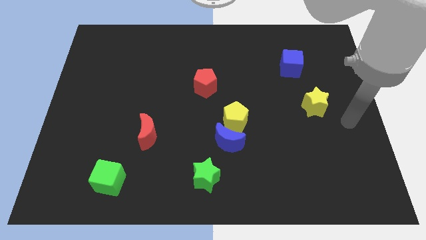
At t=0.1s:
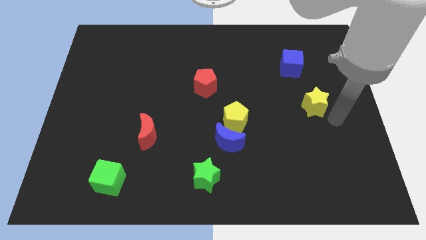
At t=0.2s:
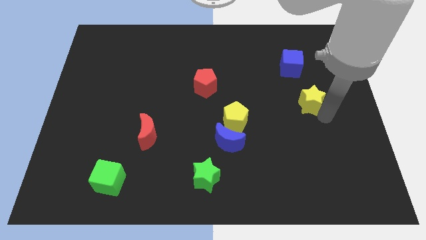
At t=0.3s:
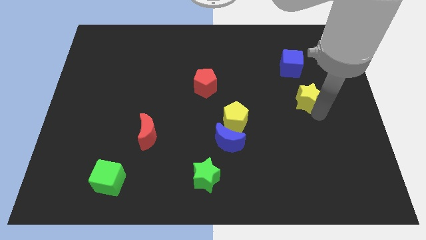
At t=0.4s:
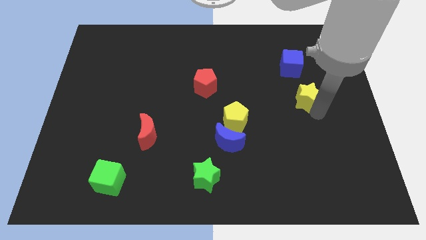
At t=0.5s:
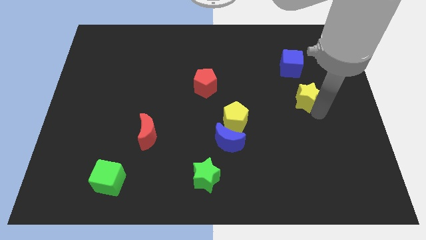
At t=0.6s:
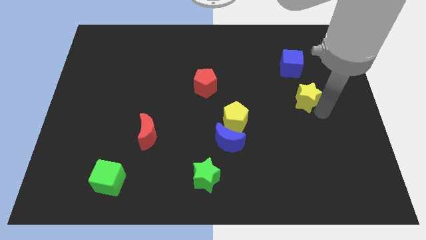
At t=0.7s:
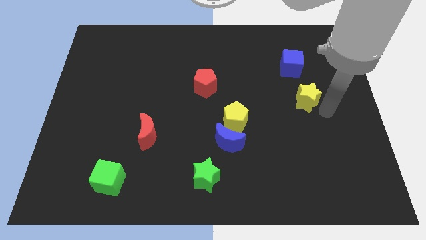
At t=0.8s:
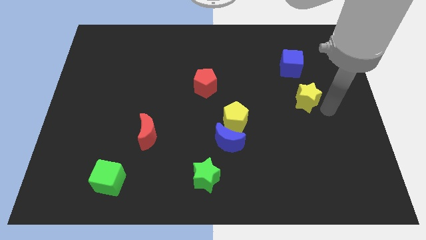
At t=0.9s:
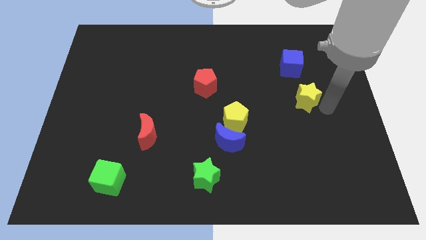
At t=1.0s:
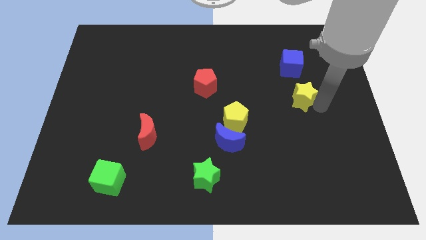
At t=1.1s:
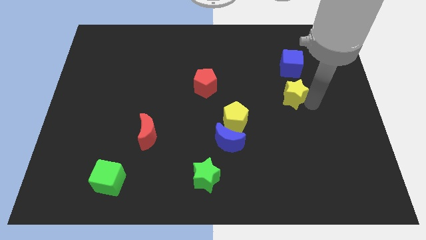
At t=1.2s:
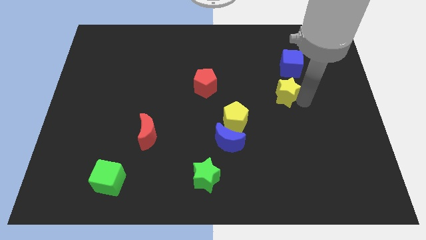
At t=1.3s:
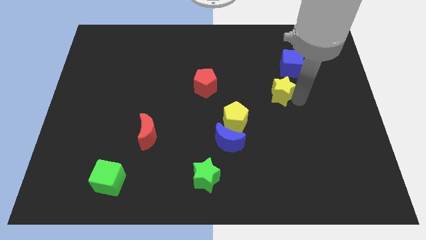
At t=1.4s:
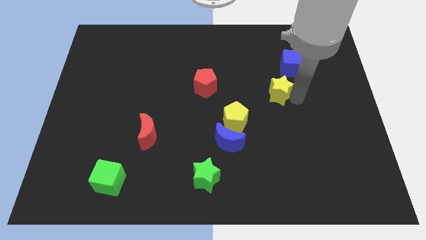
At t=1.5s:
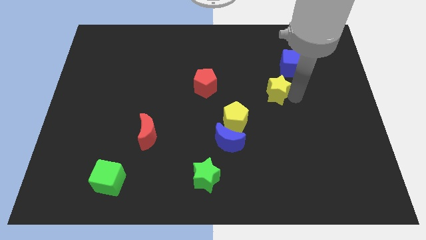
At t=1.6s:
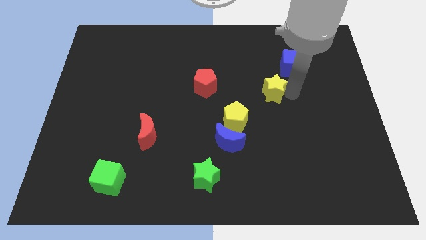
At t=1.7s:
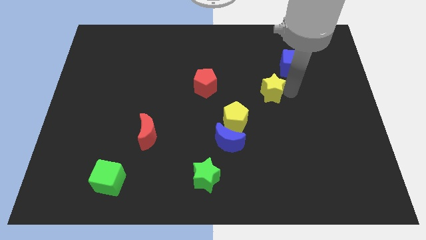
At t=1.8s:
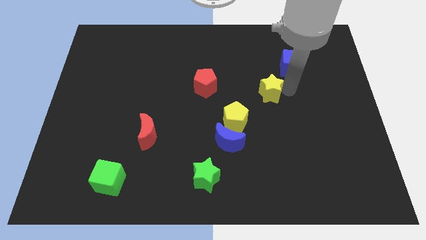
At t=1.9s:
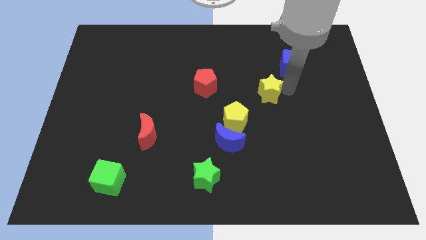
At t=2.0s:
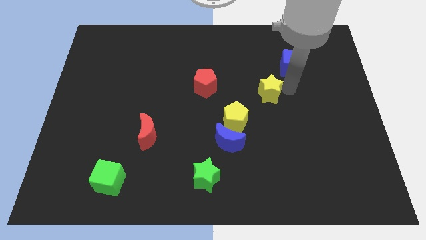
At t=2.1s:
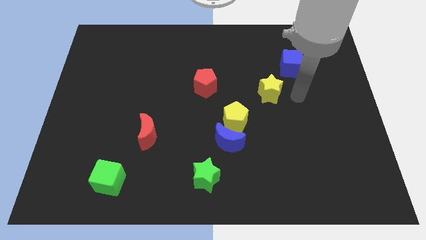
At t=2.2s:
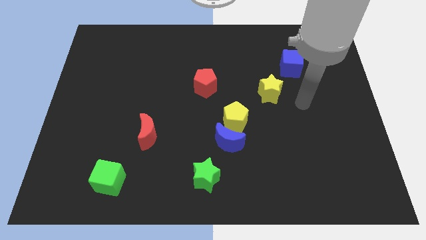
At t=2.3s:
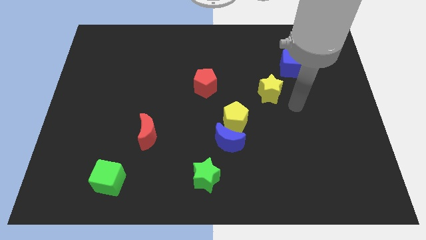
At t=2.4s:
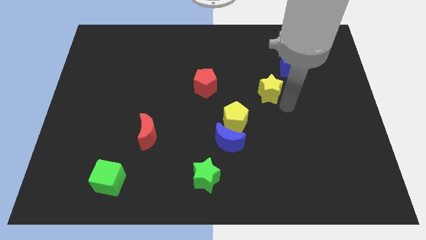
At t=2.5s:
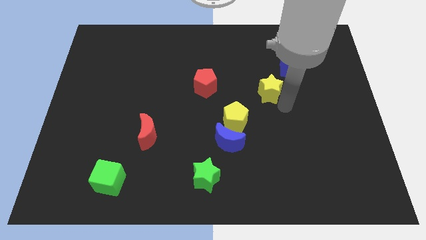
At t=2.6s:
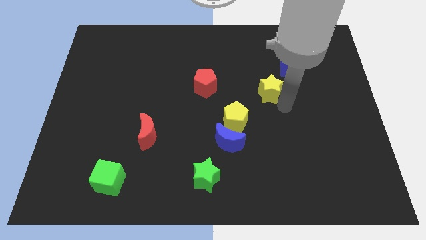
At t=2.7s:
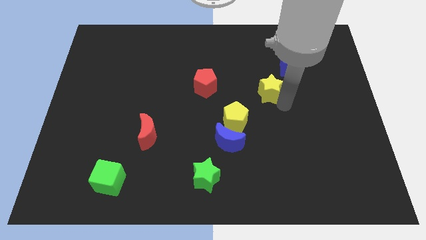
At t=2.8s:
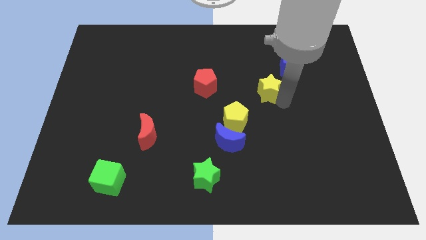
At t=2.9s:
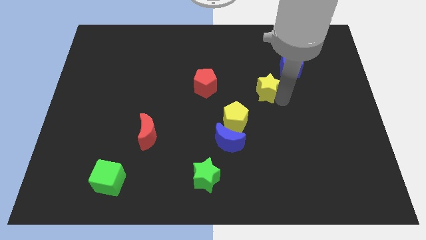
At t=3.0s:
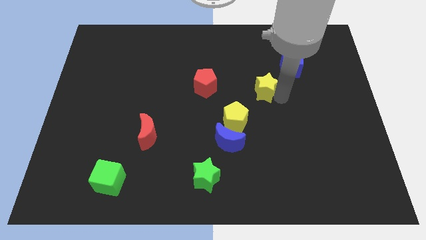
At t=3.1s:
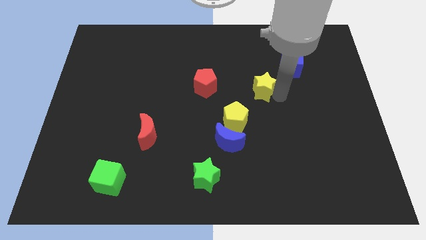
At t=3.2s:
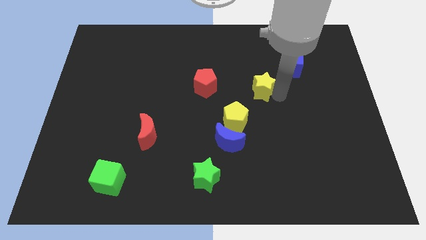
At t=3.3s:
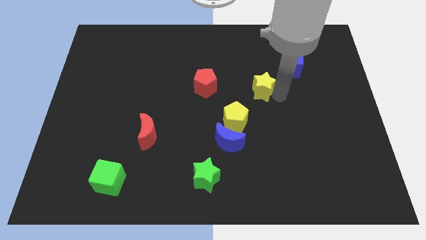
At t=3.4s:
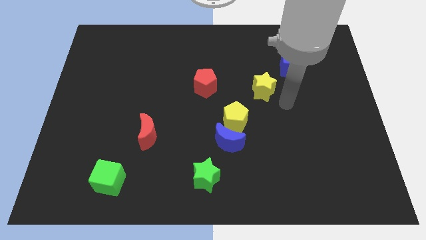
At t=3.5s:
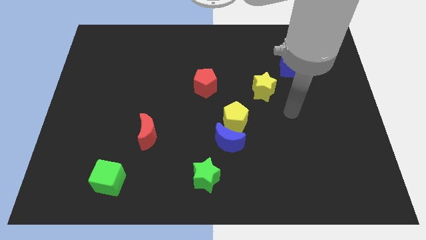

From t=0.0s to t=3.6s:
slide the yellow star towards the red pentagon

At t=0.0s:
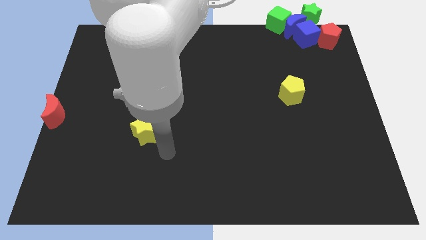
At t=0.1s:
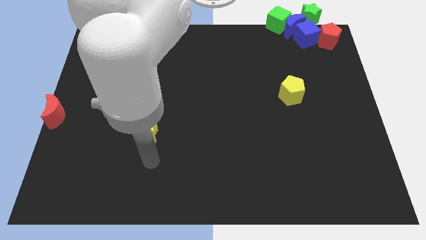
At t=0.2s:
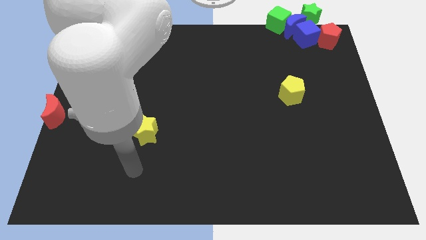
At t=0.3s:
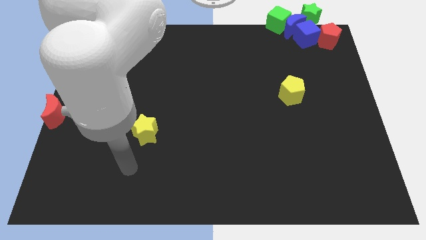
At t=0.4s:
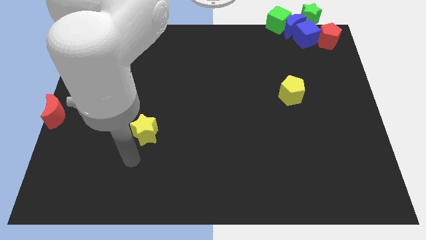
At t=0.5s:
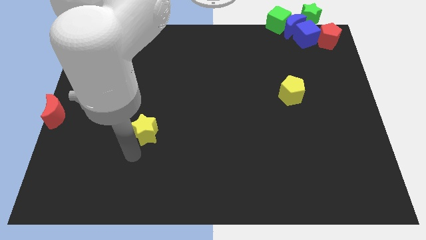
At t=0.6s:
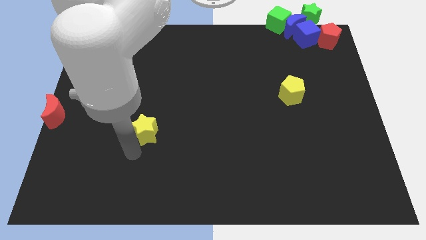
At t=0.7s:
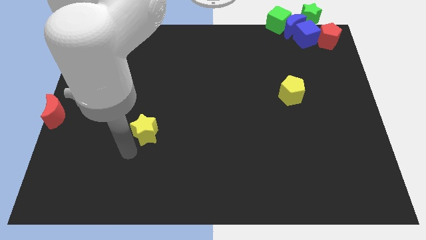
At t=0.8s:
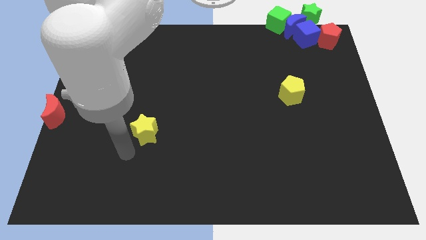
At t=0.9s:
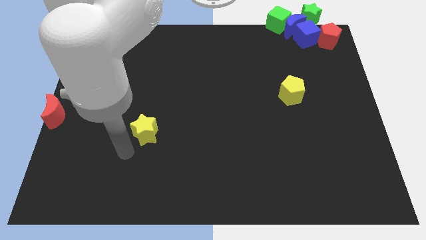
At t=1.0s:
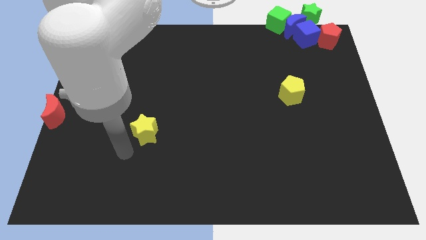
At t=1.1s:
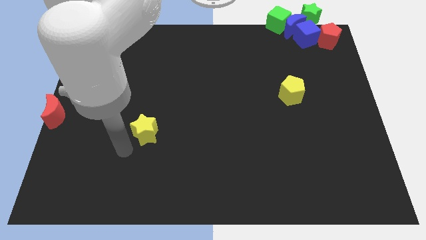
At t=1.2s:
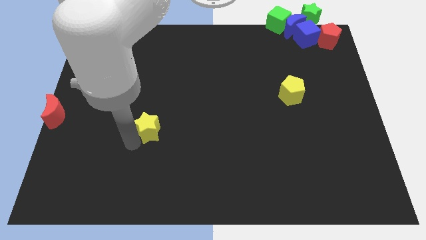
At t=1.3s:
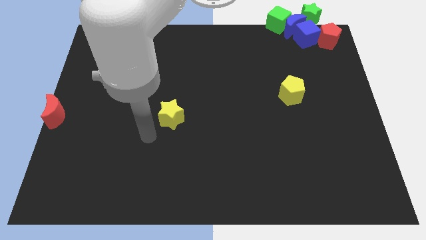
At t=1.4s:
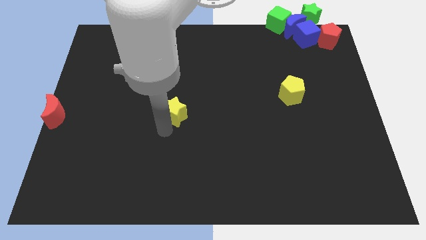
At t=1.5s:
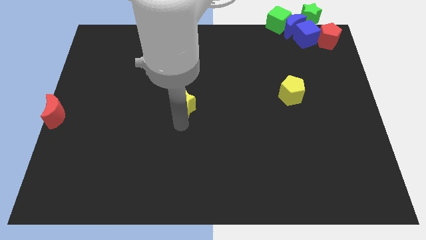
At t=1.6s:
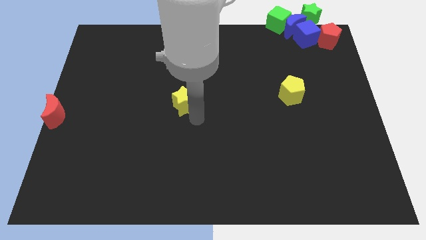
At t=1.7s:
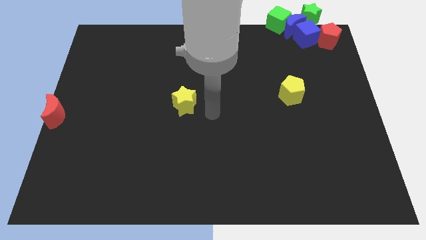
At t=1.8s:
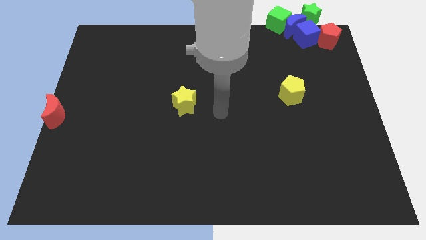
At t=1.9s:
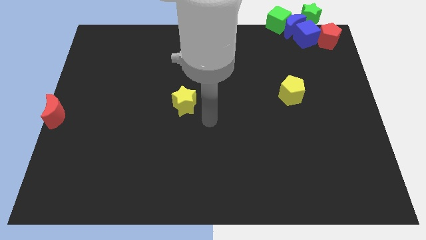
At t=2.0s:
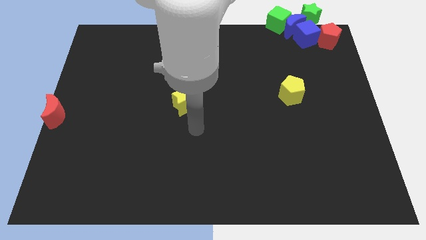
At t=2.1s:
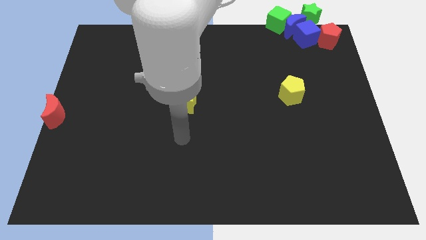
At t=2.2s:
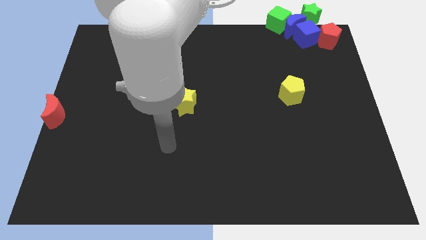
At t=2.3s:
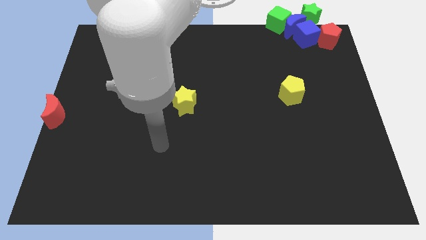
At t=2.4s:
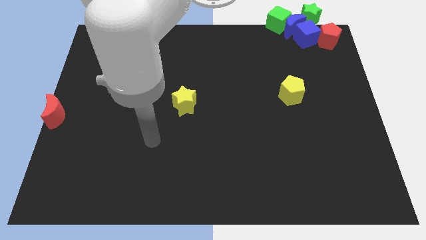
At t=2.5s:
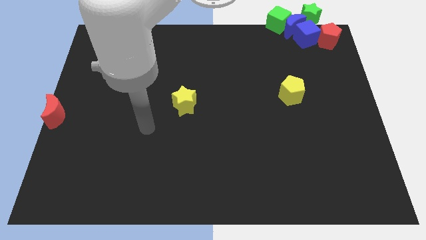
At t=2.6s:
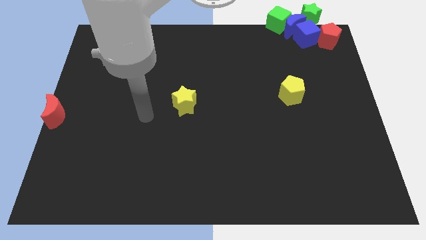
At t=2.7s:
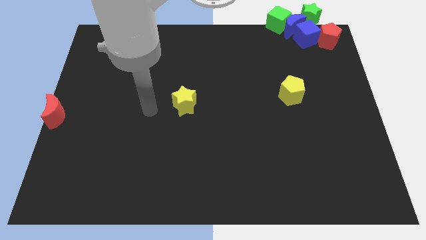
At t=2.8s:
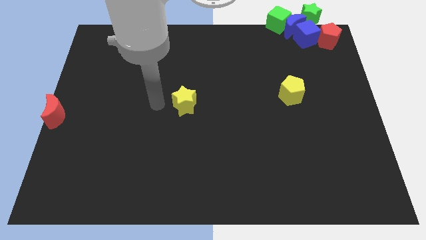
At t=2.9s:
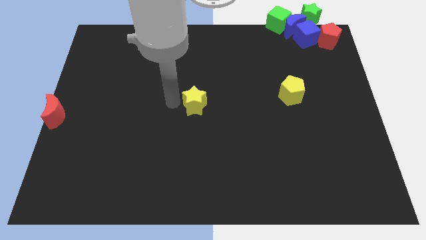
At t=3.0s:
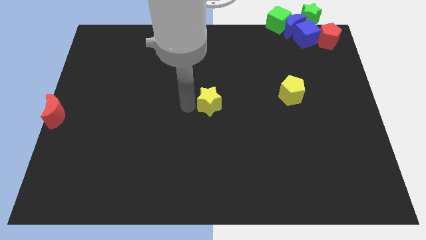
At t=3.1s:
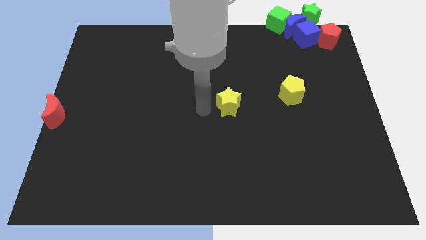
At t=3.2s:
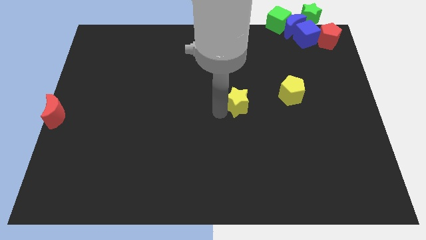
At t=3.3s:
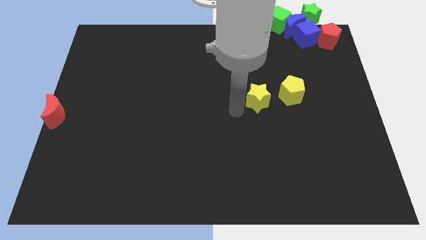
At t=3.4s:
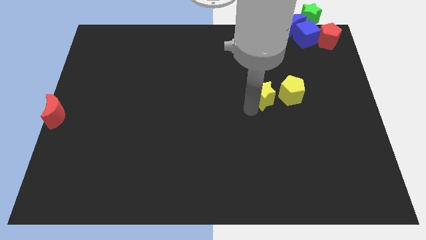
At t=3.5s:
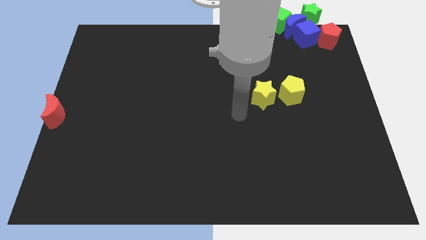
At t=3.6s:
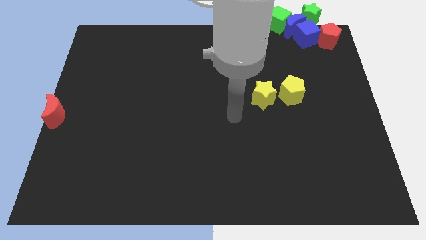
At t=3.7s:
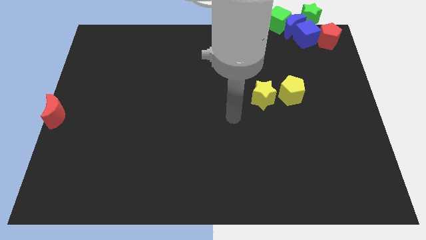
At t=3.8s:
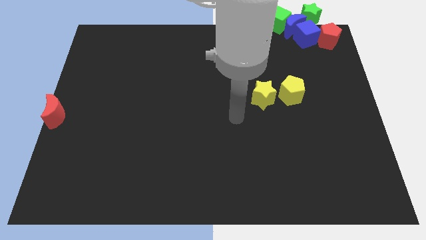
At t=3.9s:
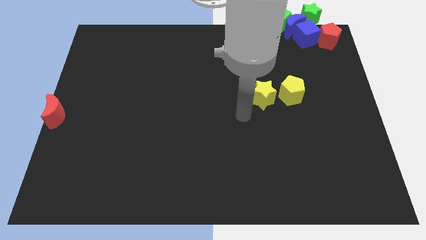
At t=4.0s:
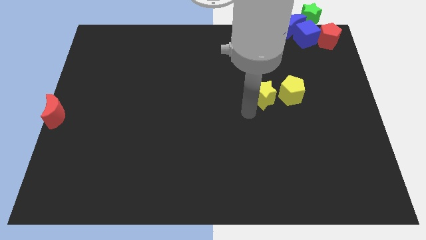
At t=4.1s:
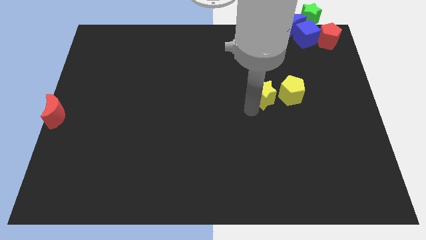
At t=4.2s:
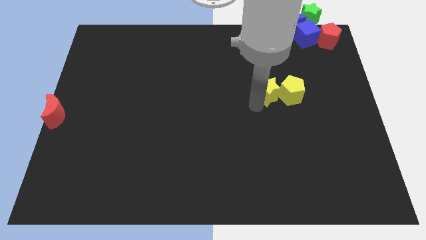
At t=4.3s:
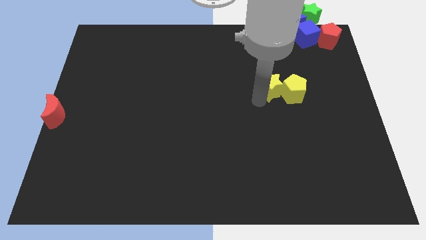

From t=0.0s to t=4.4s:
put the yellow star left to the yellow pentagon

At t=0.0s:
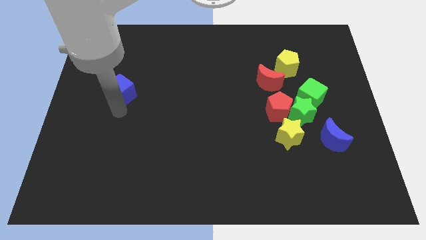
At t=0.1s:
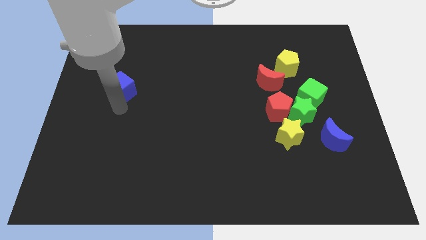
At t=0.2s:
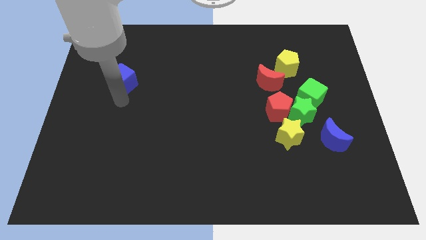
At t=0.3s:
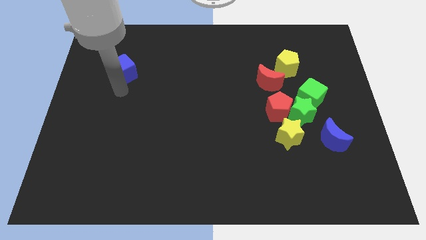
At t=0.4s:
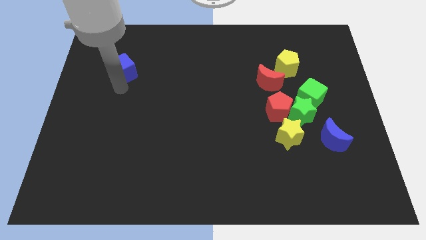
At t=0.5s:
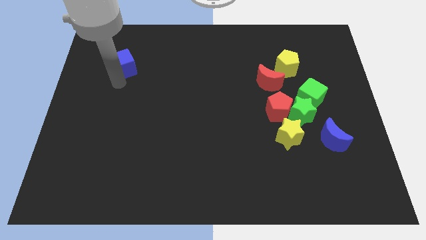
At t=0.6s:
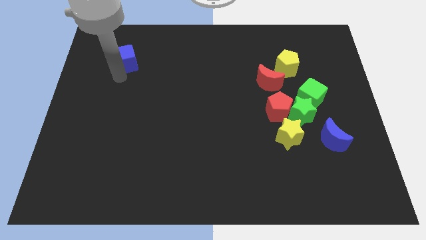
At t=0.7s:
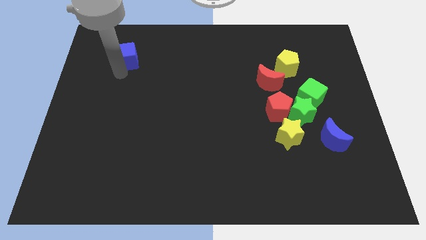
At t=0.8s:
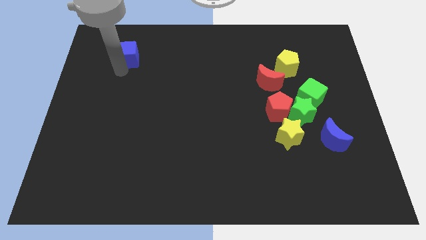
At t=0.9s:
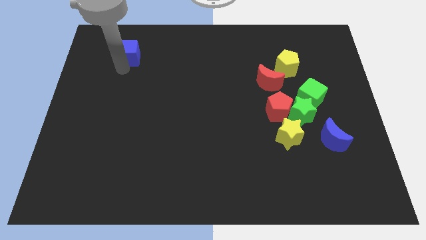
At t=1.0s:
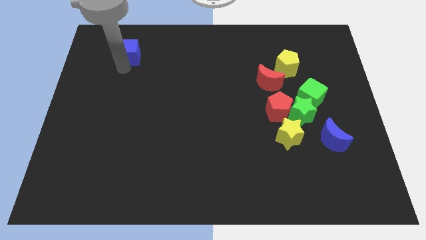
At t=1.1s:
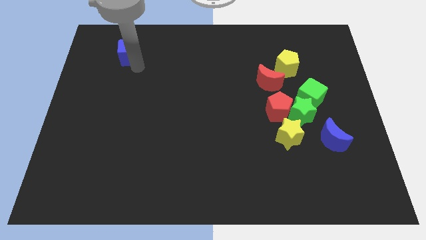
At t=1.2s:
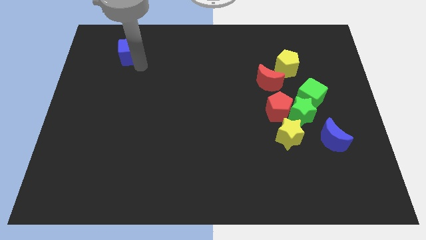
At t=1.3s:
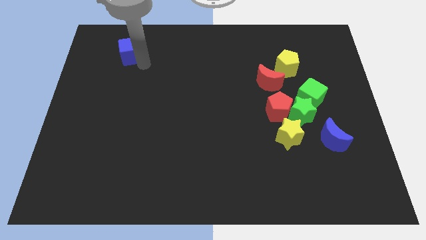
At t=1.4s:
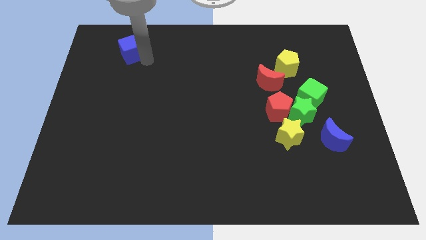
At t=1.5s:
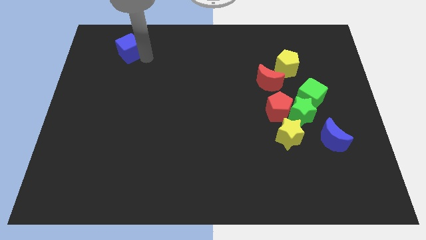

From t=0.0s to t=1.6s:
move blue cube to the top side of the board
